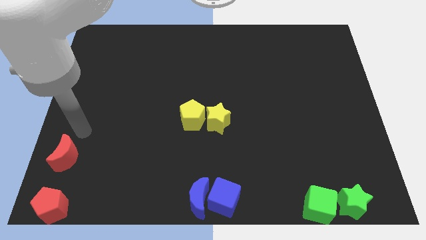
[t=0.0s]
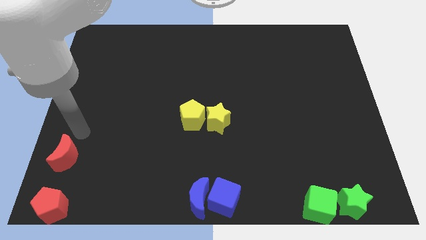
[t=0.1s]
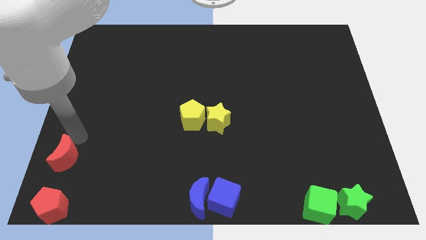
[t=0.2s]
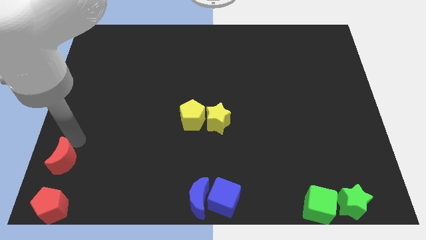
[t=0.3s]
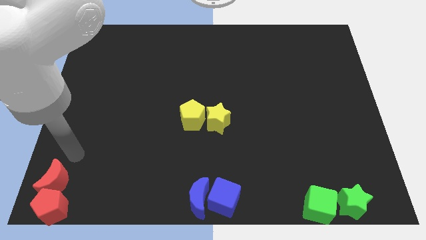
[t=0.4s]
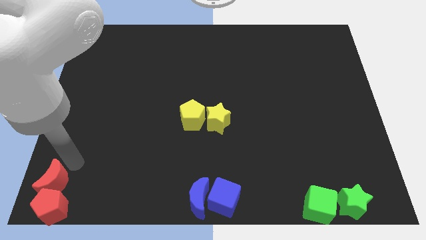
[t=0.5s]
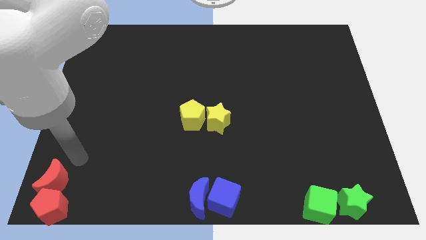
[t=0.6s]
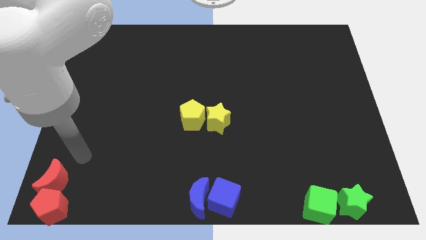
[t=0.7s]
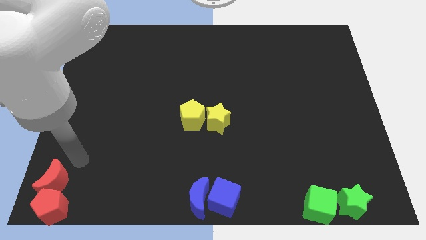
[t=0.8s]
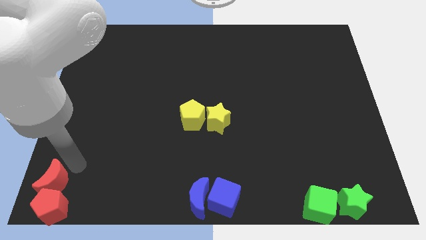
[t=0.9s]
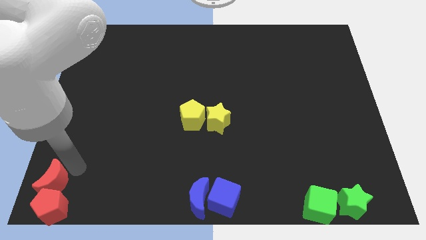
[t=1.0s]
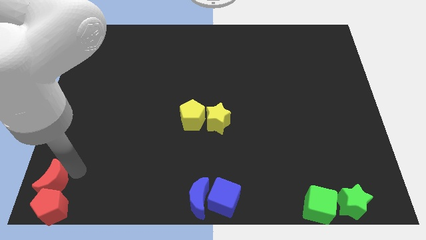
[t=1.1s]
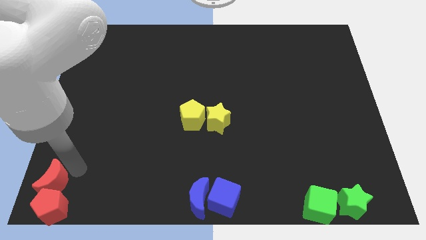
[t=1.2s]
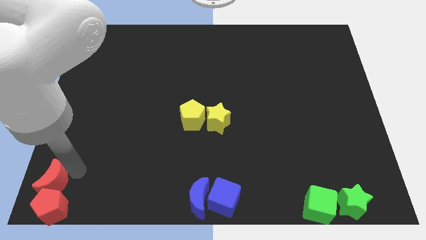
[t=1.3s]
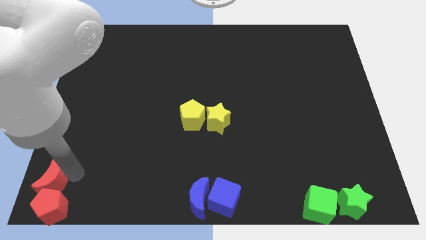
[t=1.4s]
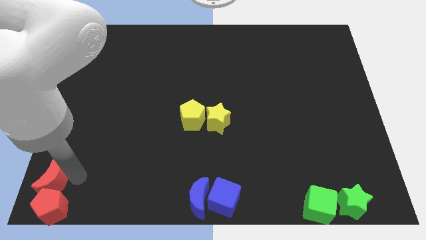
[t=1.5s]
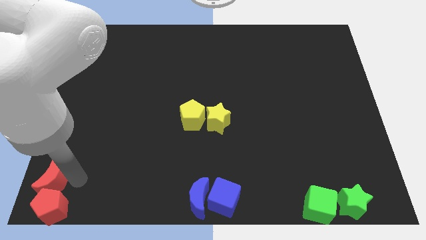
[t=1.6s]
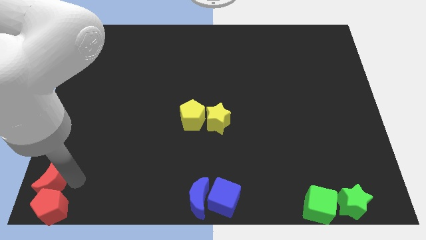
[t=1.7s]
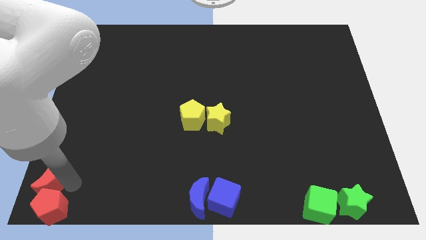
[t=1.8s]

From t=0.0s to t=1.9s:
place the red crescent above the red pentagon

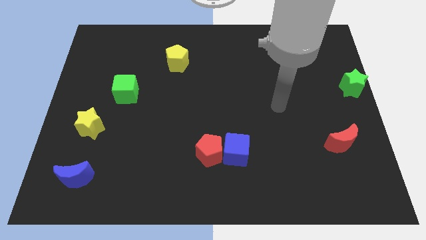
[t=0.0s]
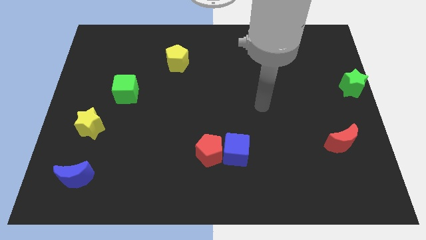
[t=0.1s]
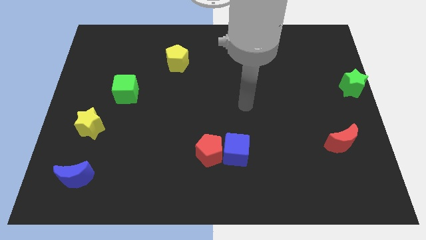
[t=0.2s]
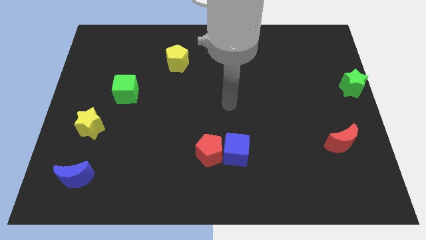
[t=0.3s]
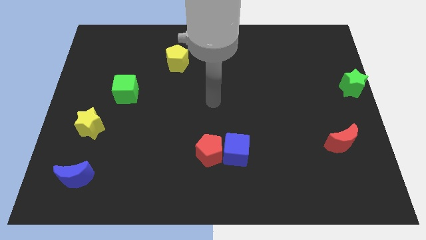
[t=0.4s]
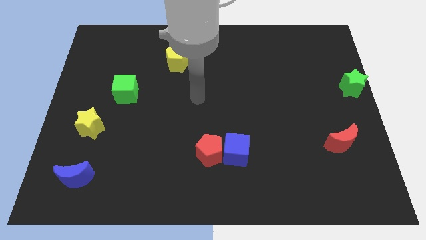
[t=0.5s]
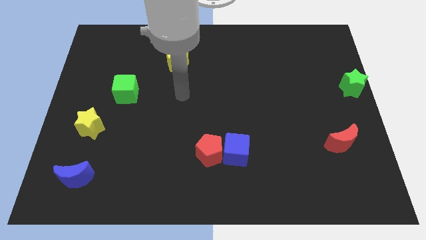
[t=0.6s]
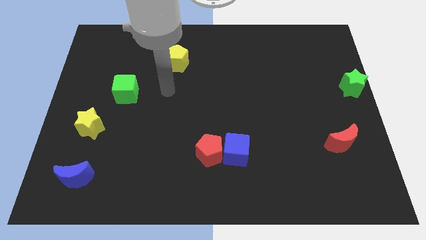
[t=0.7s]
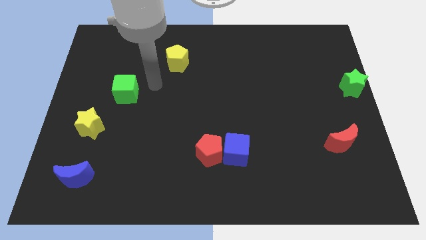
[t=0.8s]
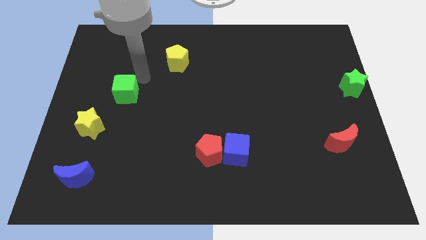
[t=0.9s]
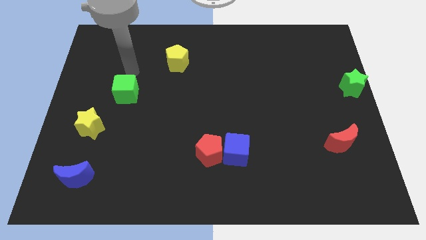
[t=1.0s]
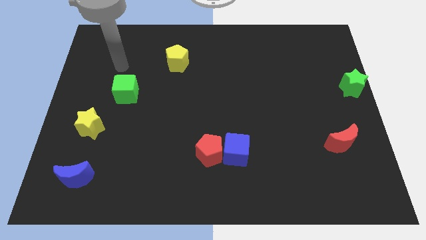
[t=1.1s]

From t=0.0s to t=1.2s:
place your arm on the top of the green cube

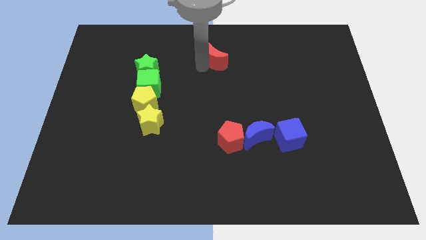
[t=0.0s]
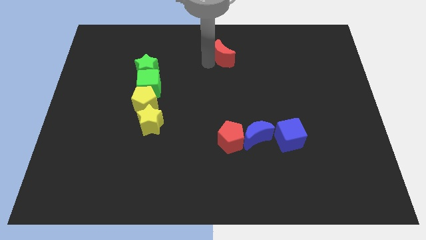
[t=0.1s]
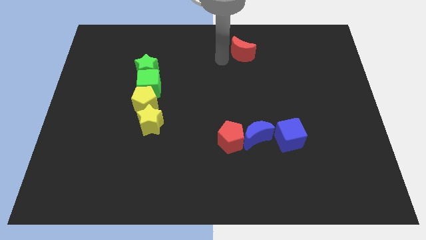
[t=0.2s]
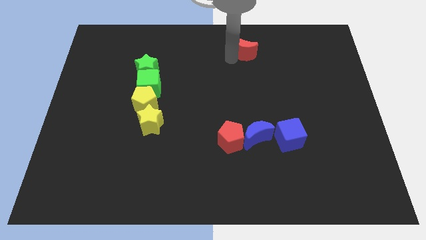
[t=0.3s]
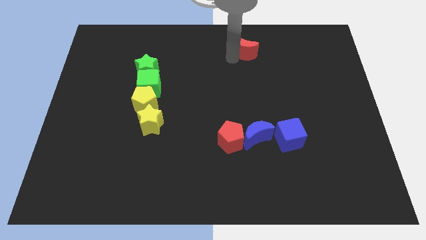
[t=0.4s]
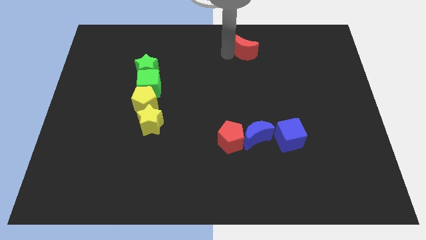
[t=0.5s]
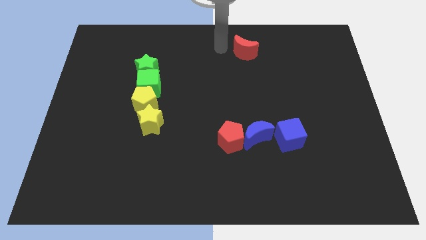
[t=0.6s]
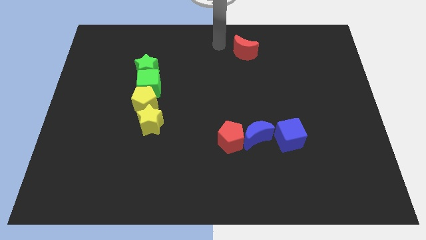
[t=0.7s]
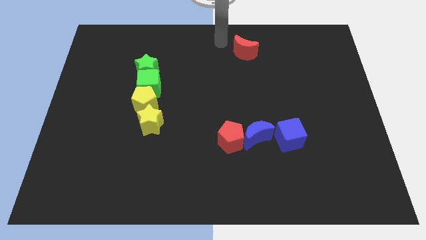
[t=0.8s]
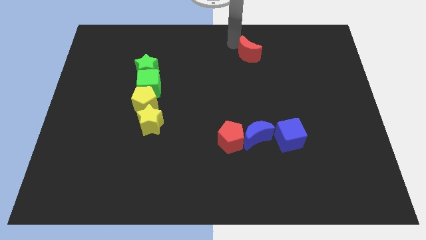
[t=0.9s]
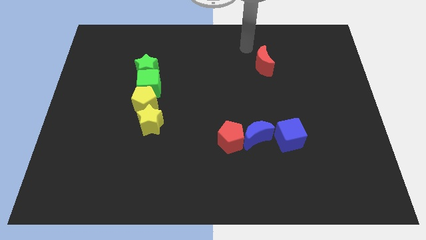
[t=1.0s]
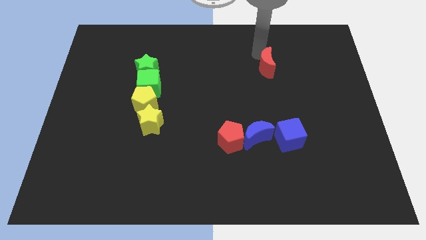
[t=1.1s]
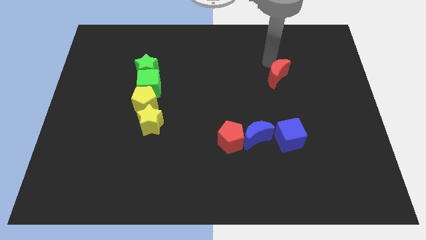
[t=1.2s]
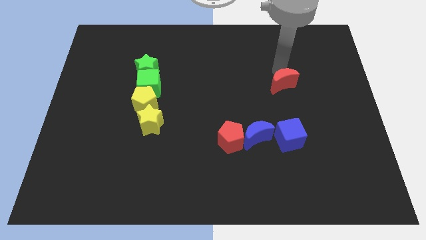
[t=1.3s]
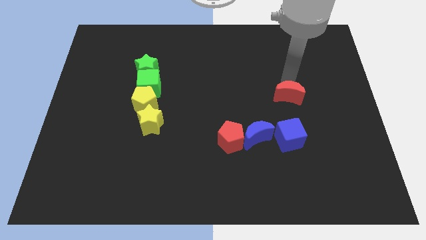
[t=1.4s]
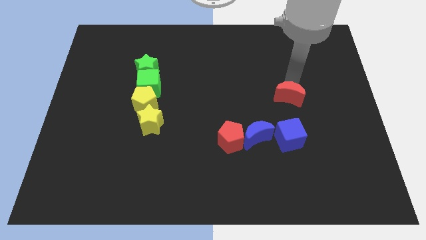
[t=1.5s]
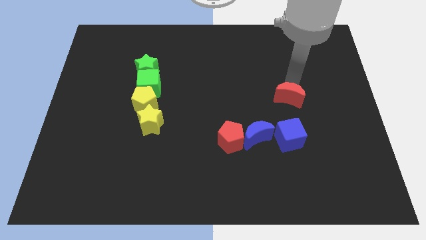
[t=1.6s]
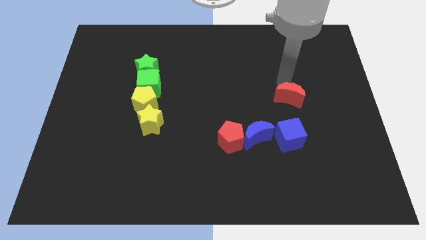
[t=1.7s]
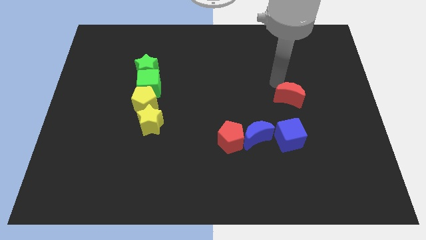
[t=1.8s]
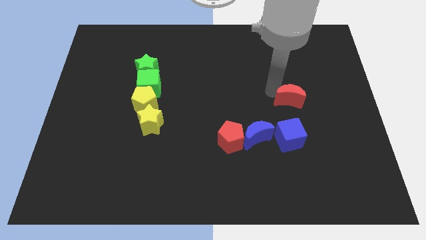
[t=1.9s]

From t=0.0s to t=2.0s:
move the red crescent above to the blue cube

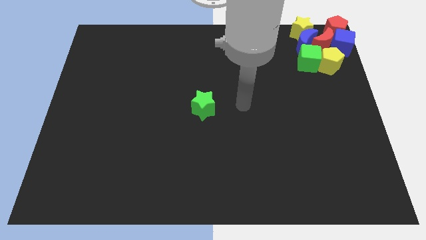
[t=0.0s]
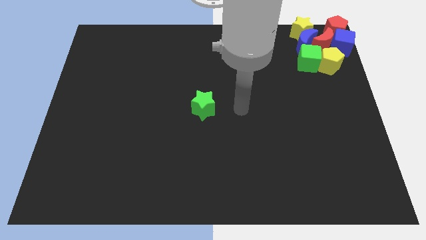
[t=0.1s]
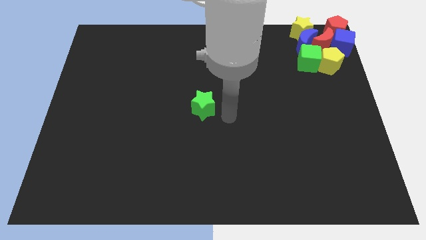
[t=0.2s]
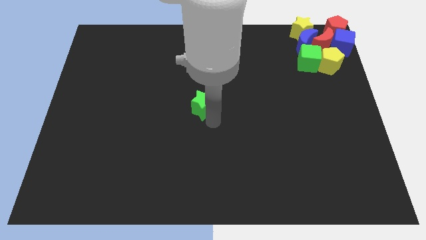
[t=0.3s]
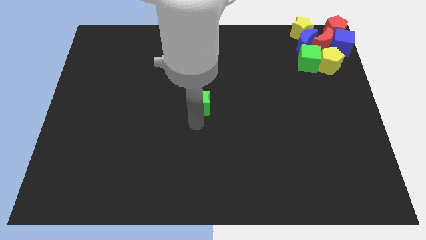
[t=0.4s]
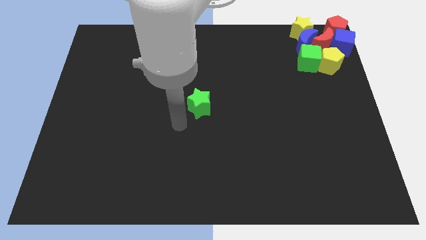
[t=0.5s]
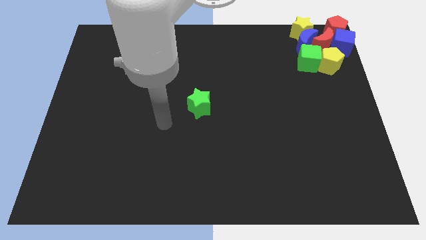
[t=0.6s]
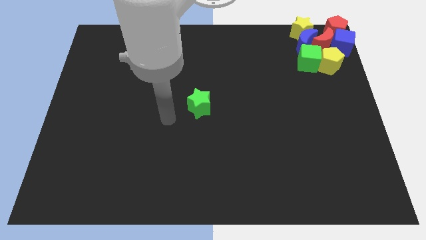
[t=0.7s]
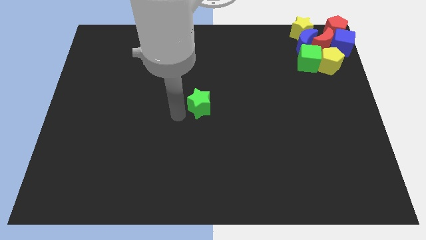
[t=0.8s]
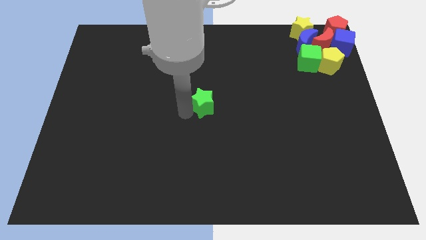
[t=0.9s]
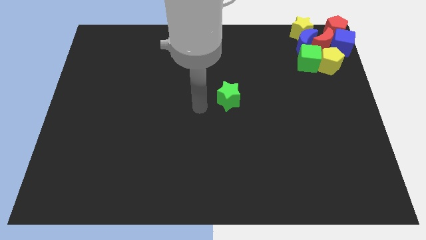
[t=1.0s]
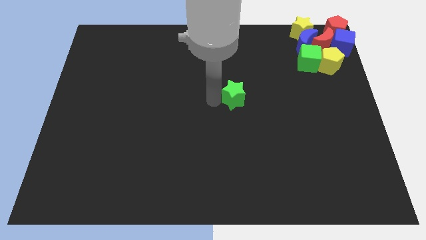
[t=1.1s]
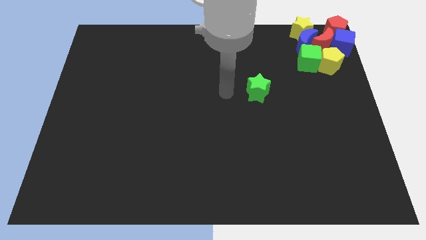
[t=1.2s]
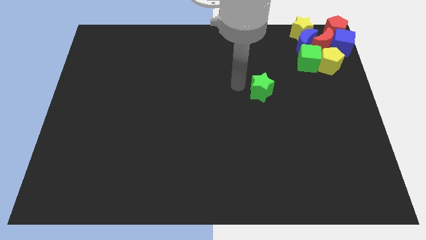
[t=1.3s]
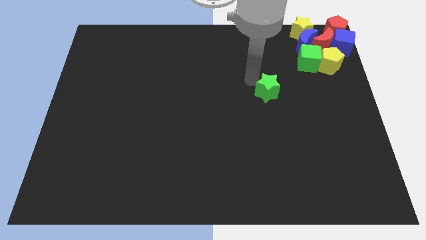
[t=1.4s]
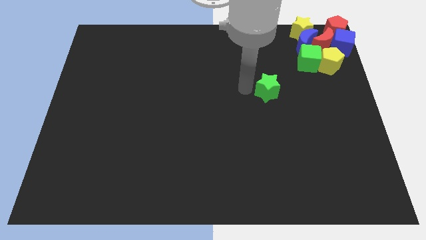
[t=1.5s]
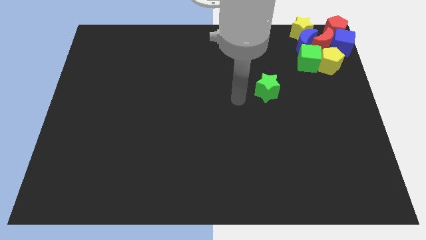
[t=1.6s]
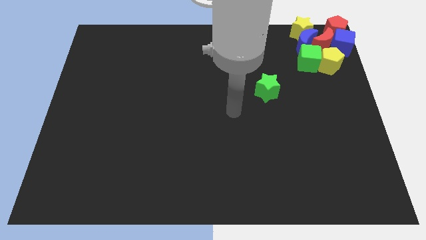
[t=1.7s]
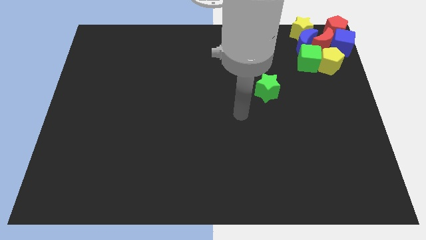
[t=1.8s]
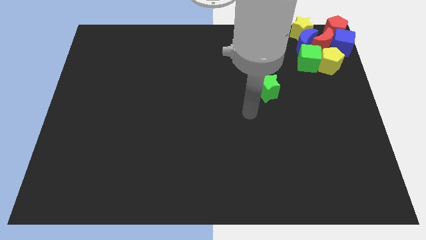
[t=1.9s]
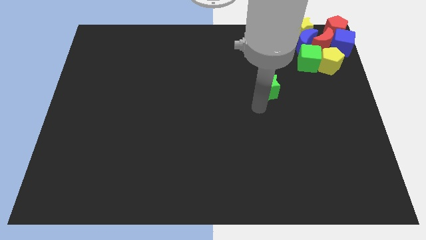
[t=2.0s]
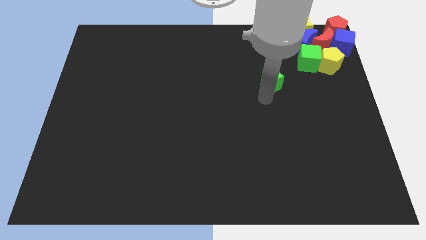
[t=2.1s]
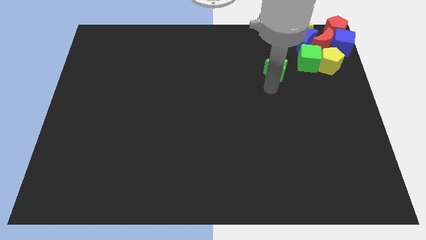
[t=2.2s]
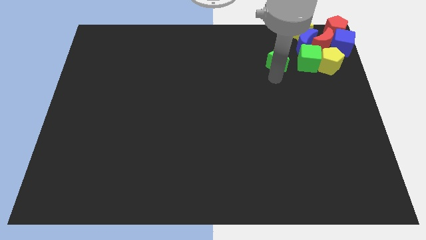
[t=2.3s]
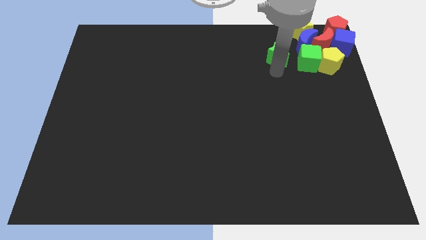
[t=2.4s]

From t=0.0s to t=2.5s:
move the green star to the left of green cube

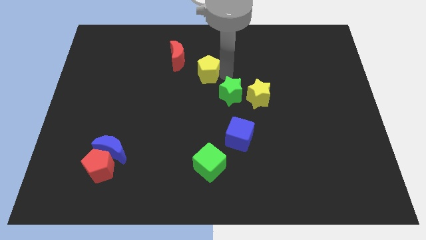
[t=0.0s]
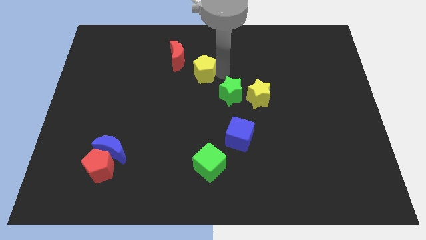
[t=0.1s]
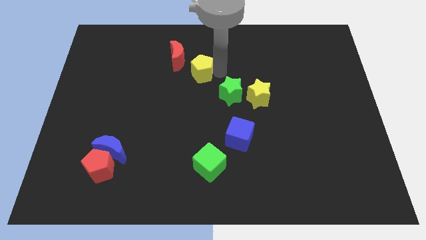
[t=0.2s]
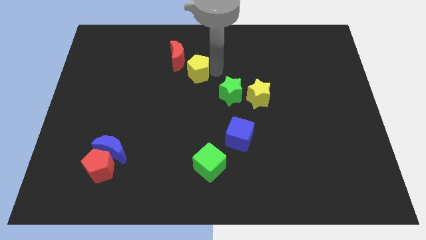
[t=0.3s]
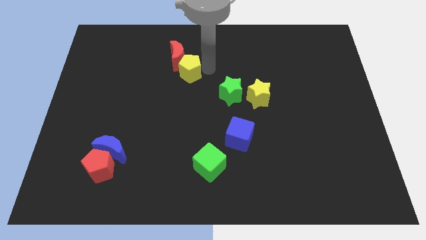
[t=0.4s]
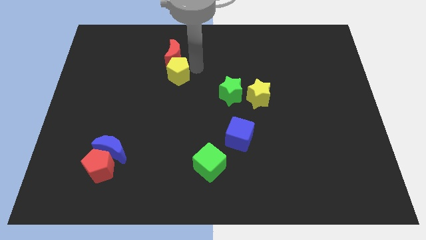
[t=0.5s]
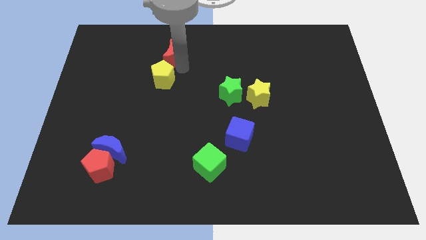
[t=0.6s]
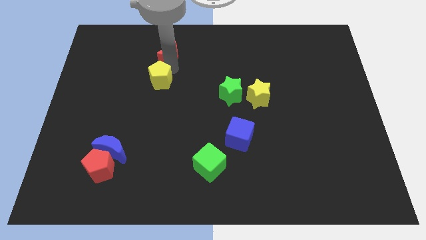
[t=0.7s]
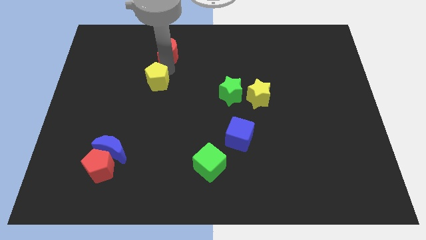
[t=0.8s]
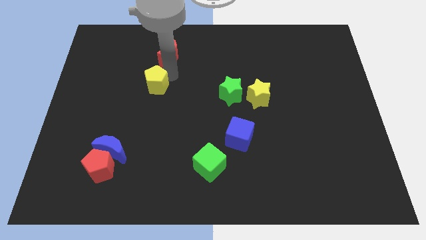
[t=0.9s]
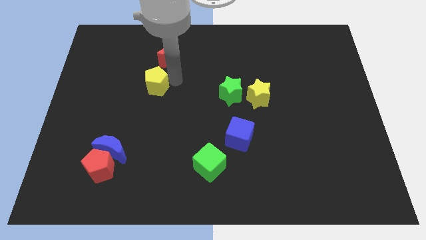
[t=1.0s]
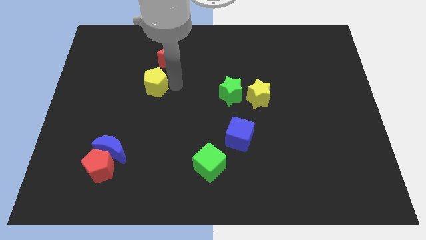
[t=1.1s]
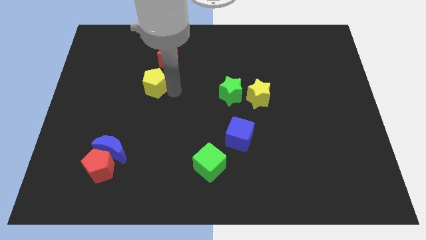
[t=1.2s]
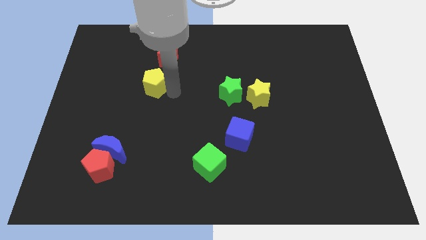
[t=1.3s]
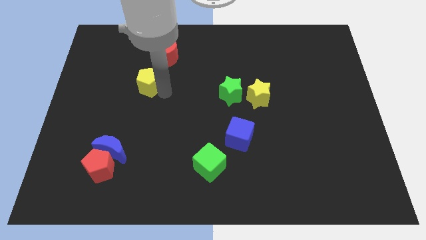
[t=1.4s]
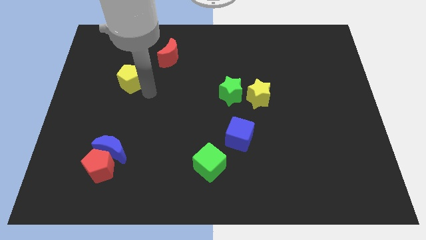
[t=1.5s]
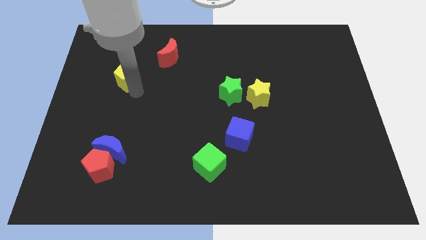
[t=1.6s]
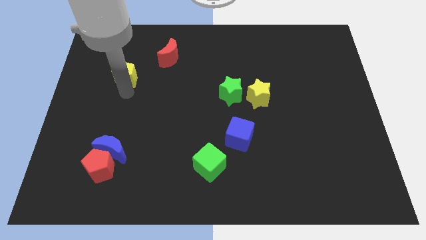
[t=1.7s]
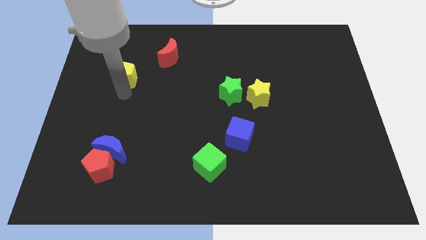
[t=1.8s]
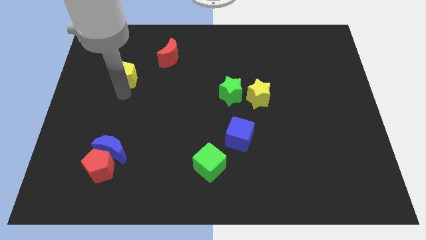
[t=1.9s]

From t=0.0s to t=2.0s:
put the yellow pentagon diagonally bottom left to the red moon
